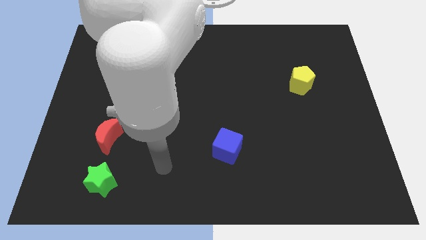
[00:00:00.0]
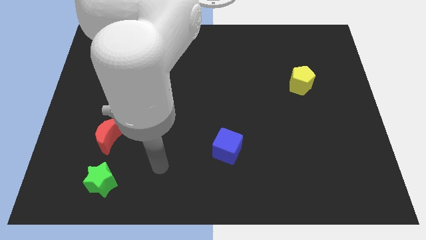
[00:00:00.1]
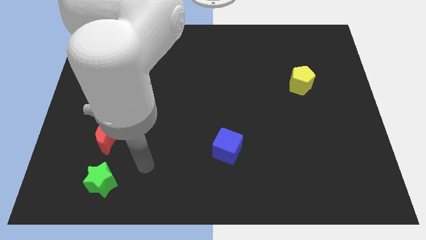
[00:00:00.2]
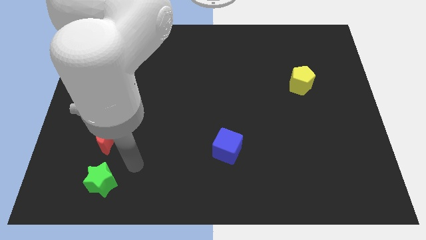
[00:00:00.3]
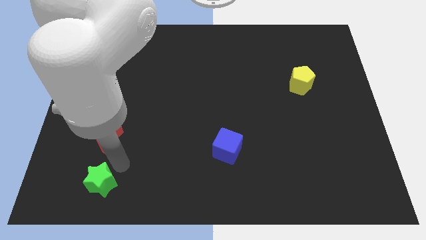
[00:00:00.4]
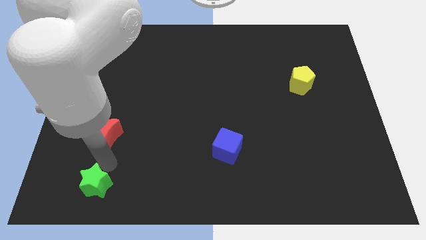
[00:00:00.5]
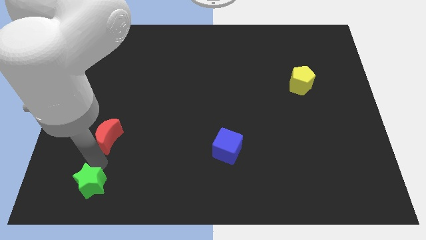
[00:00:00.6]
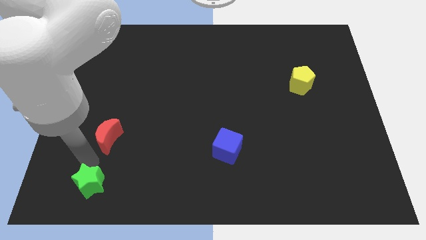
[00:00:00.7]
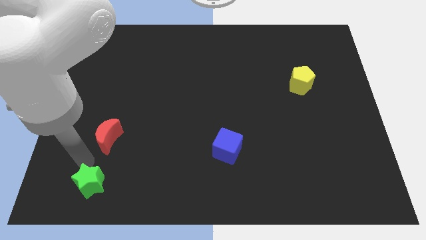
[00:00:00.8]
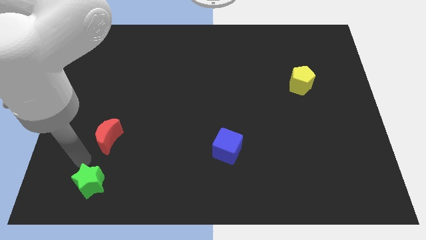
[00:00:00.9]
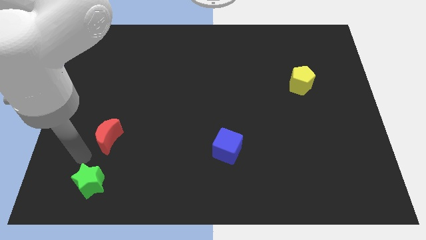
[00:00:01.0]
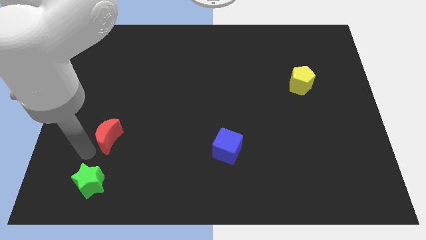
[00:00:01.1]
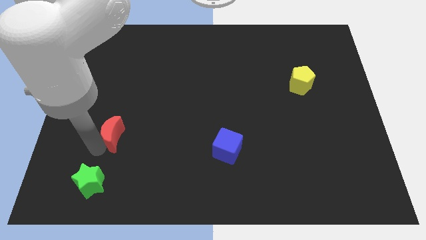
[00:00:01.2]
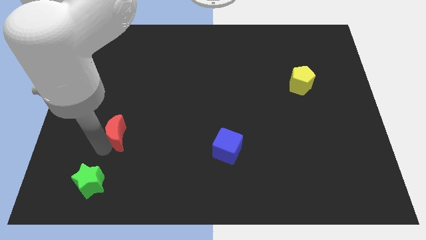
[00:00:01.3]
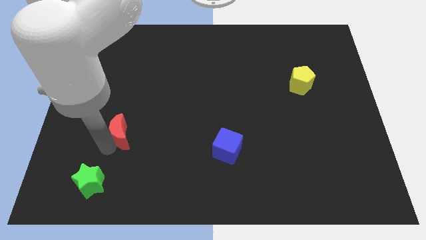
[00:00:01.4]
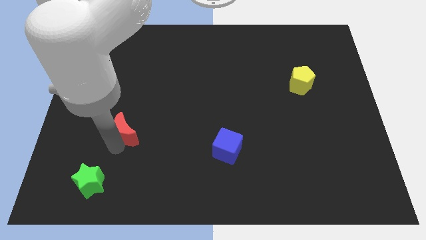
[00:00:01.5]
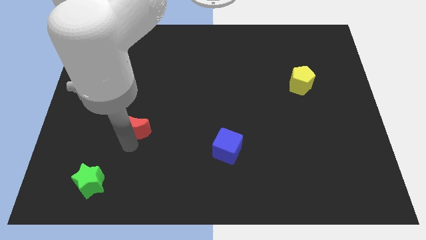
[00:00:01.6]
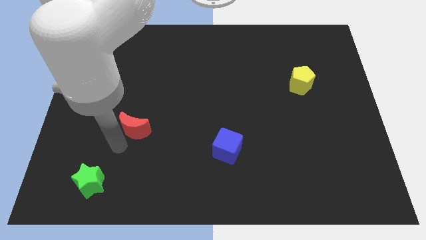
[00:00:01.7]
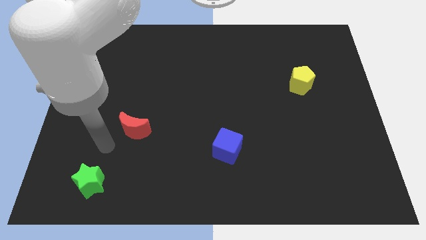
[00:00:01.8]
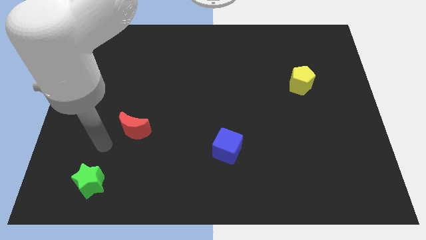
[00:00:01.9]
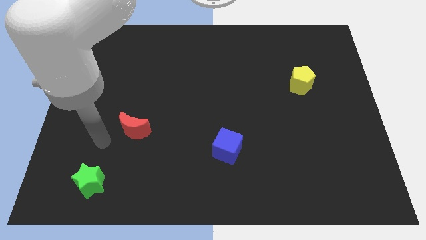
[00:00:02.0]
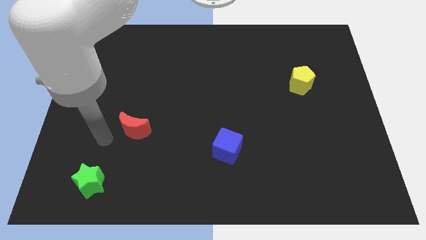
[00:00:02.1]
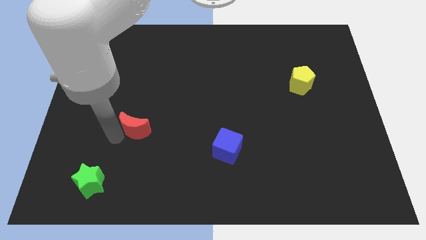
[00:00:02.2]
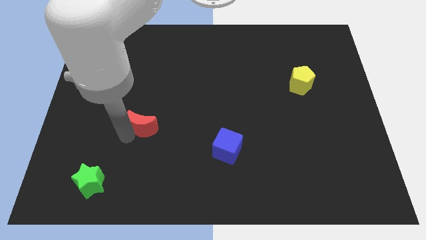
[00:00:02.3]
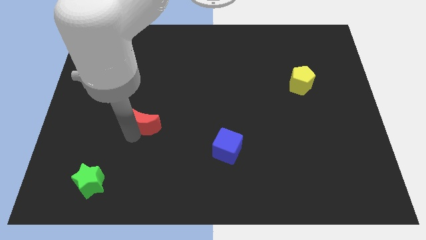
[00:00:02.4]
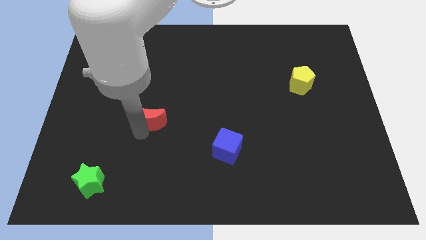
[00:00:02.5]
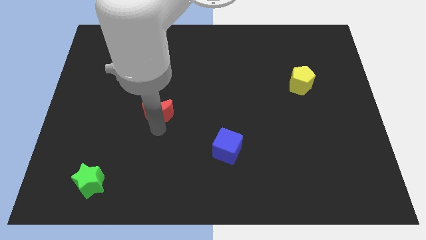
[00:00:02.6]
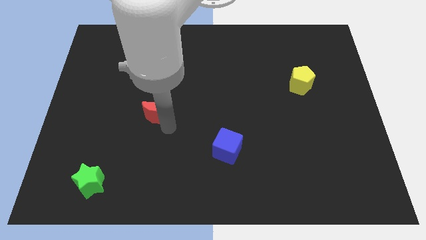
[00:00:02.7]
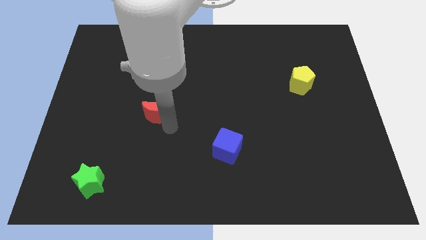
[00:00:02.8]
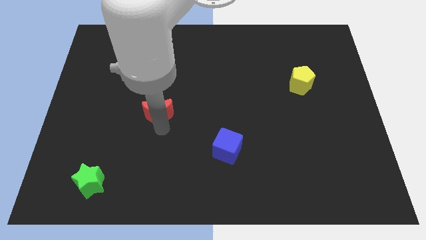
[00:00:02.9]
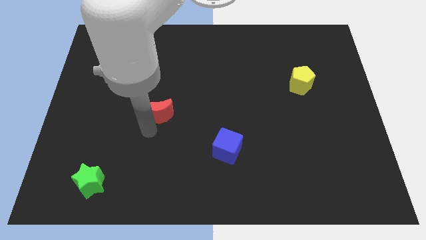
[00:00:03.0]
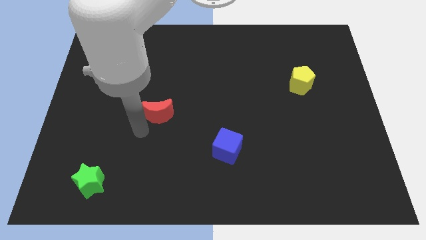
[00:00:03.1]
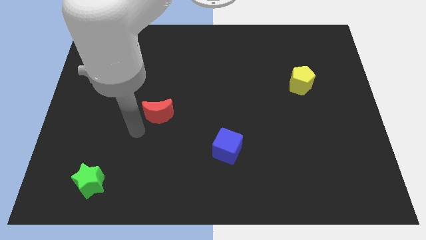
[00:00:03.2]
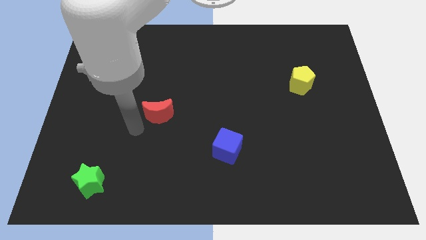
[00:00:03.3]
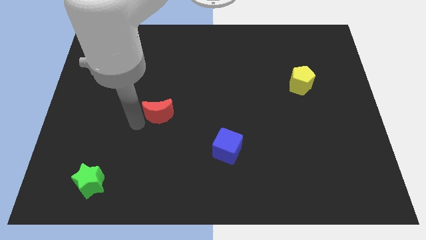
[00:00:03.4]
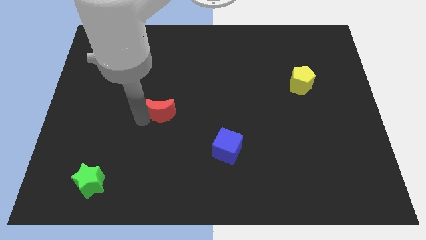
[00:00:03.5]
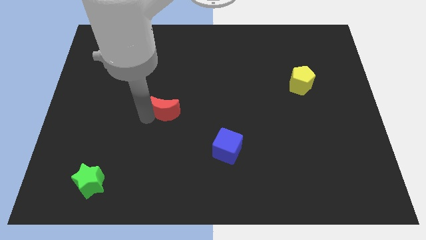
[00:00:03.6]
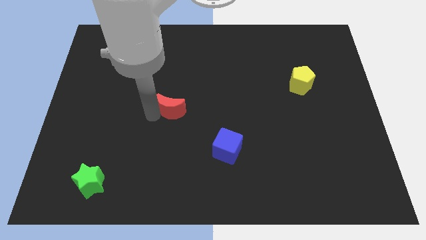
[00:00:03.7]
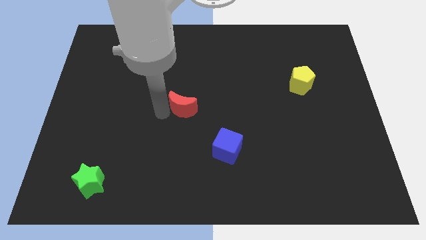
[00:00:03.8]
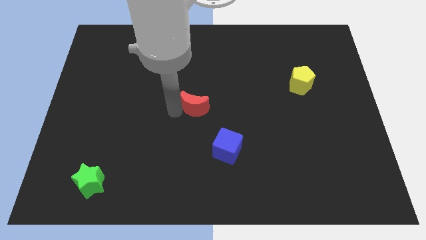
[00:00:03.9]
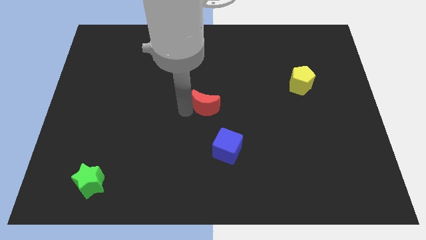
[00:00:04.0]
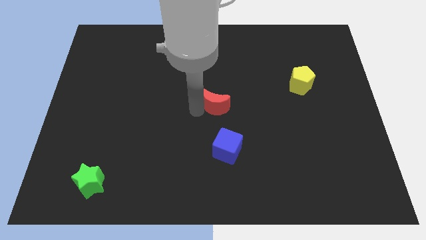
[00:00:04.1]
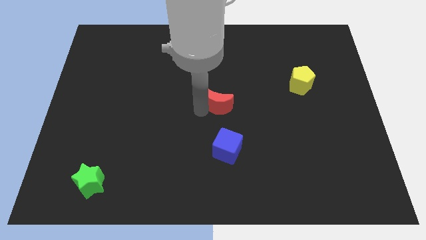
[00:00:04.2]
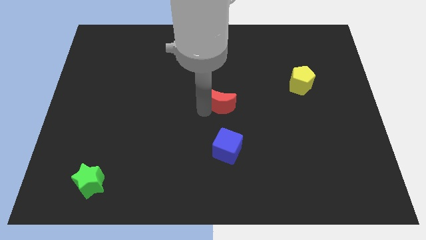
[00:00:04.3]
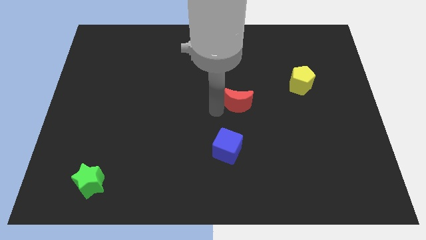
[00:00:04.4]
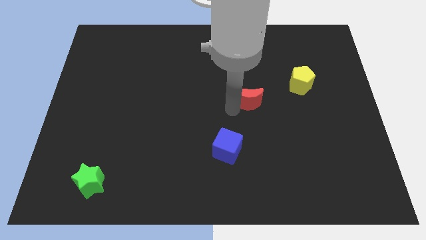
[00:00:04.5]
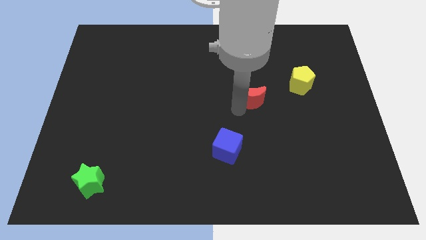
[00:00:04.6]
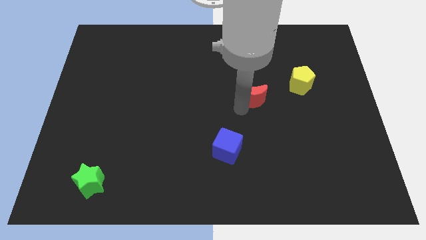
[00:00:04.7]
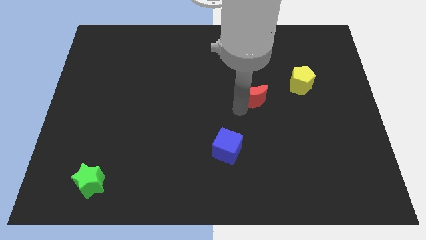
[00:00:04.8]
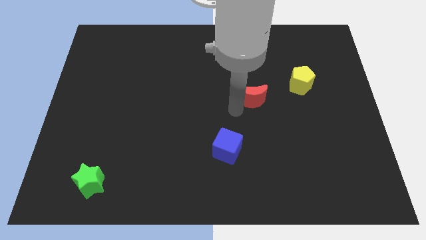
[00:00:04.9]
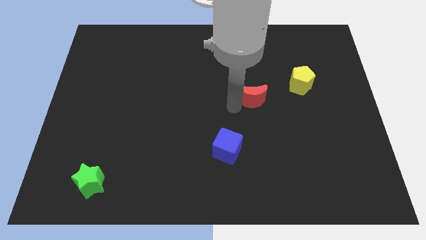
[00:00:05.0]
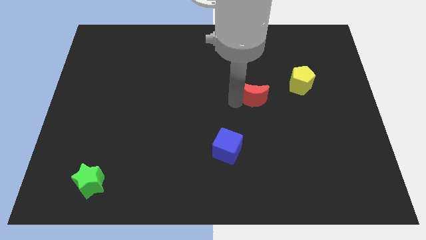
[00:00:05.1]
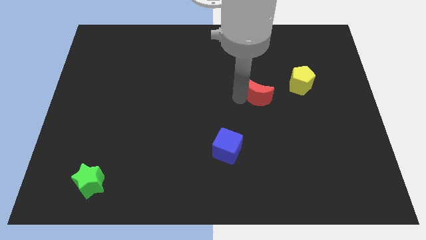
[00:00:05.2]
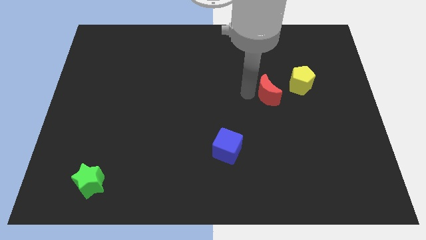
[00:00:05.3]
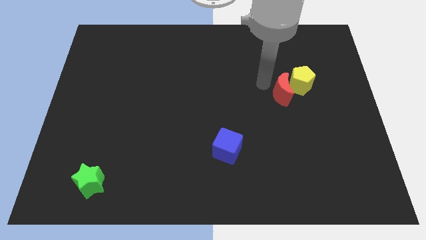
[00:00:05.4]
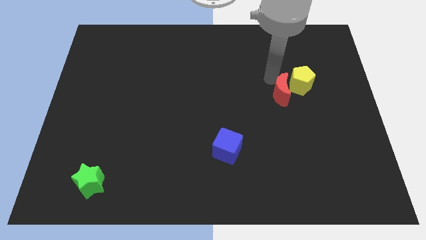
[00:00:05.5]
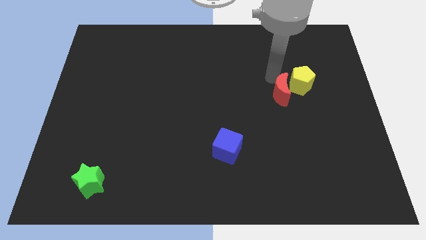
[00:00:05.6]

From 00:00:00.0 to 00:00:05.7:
put the red moon to the pentagon

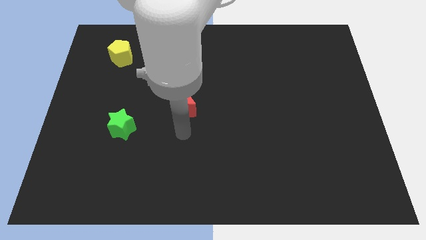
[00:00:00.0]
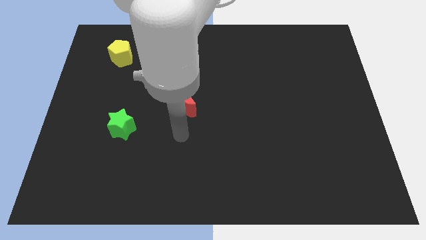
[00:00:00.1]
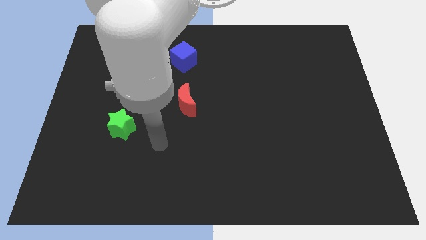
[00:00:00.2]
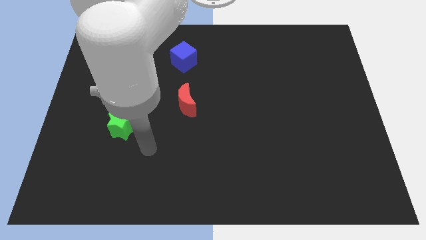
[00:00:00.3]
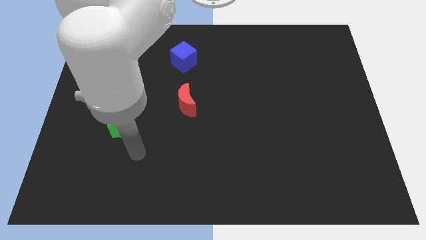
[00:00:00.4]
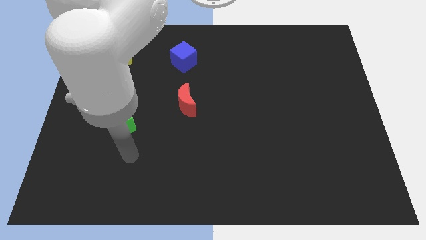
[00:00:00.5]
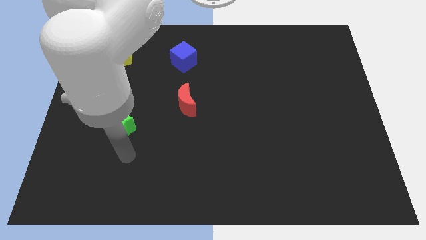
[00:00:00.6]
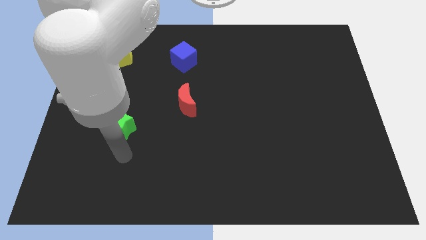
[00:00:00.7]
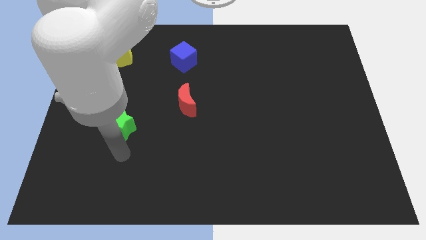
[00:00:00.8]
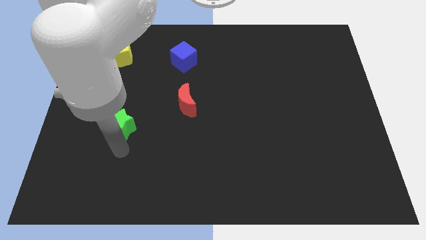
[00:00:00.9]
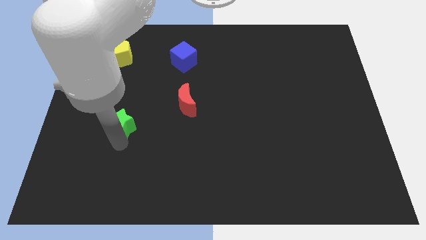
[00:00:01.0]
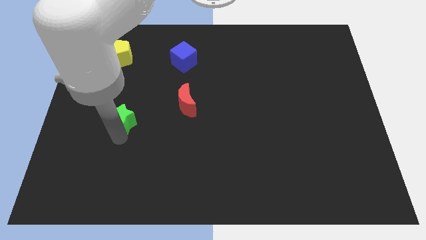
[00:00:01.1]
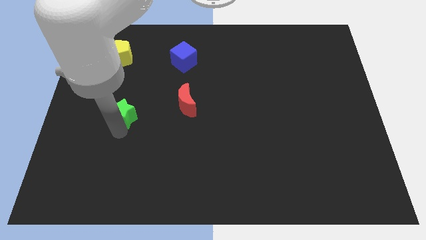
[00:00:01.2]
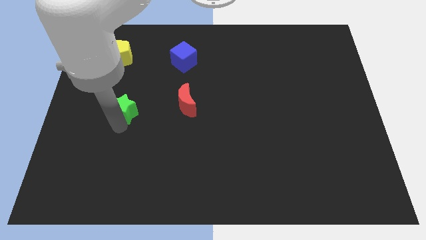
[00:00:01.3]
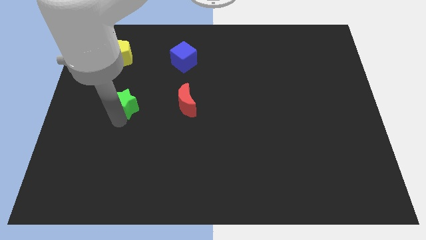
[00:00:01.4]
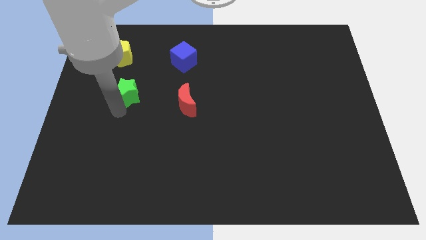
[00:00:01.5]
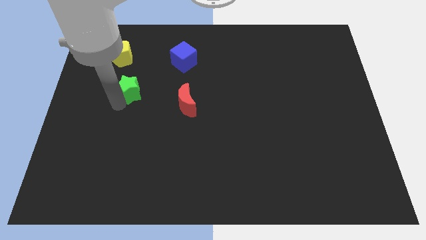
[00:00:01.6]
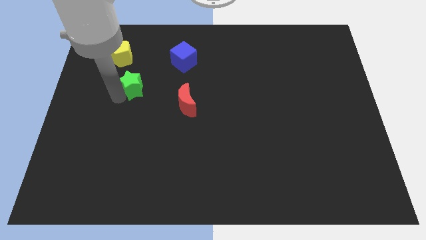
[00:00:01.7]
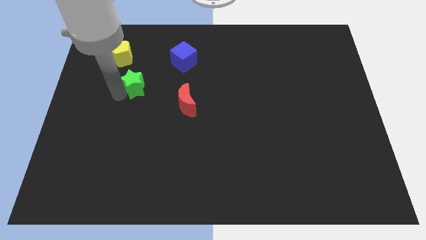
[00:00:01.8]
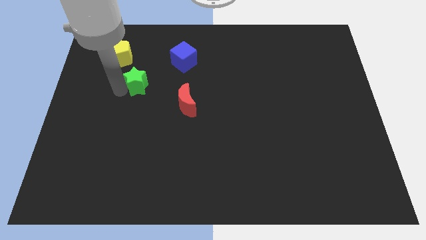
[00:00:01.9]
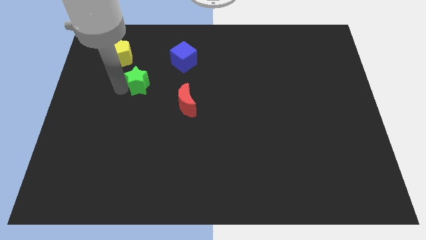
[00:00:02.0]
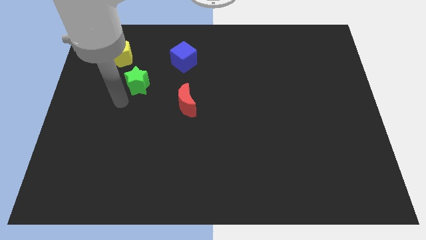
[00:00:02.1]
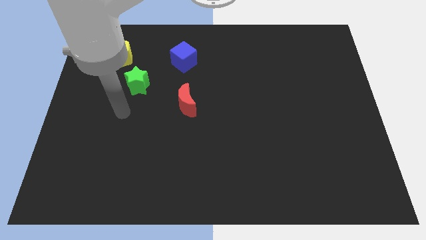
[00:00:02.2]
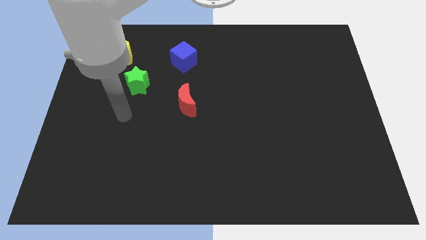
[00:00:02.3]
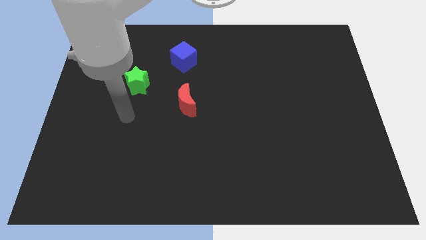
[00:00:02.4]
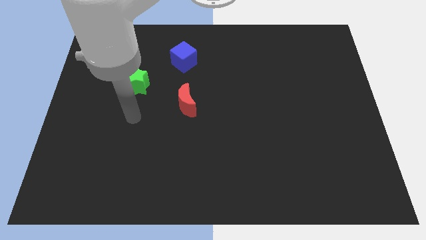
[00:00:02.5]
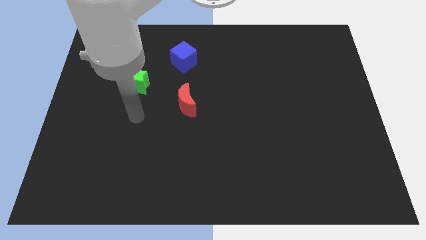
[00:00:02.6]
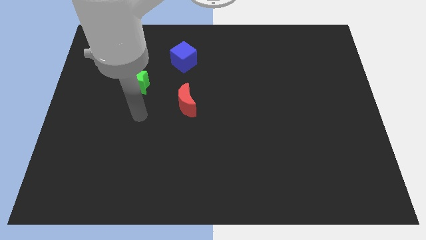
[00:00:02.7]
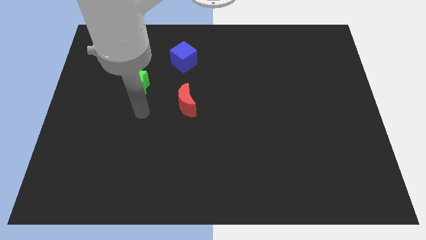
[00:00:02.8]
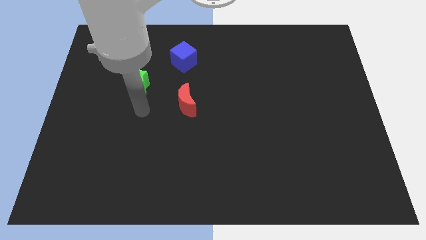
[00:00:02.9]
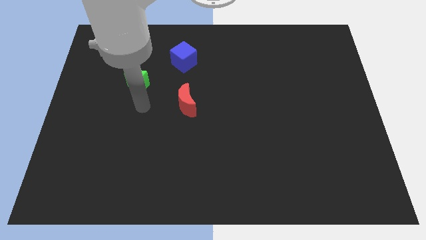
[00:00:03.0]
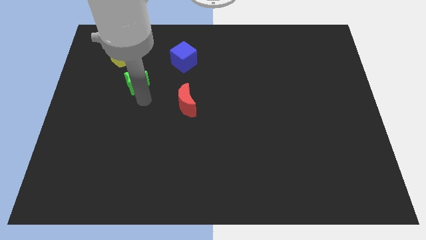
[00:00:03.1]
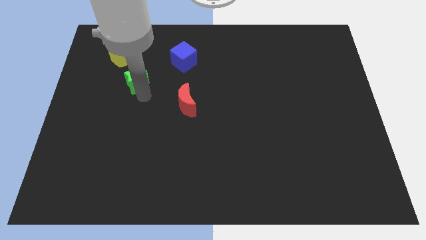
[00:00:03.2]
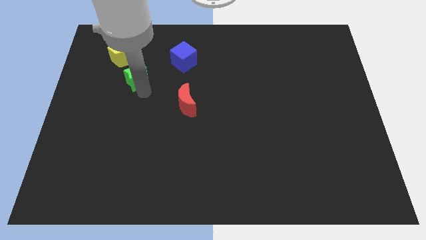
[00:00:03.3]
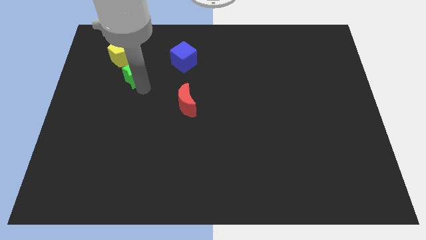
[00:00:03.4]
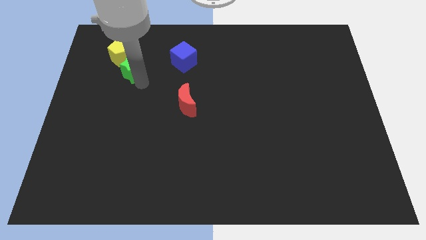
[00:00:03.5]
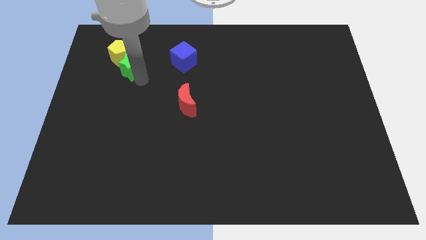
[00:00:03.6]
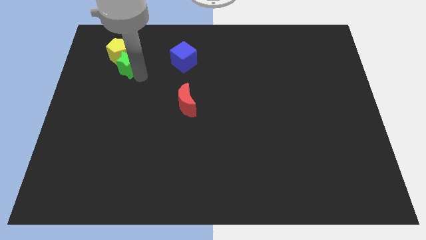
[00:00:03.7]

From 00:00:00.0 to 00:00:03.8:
push the star close to the pentagon
